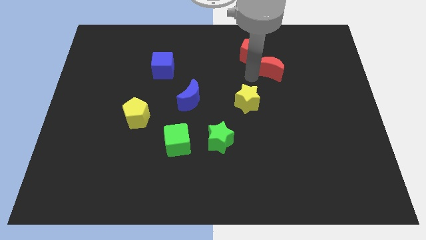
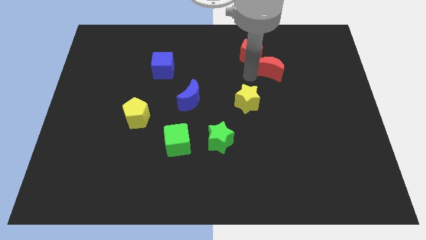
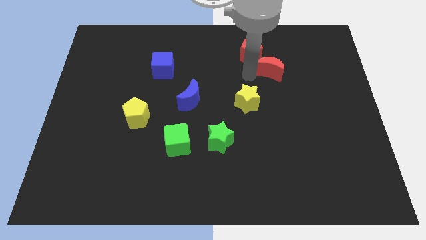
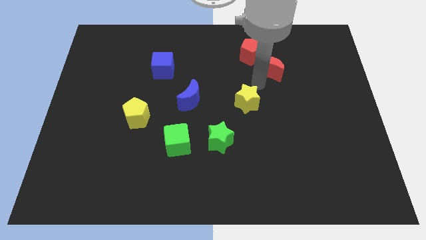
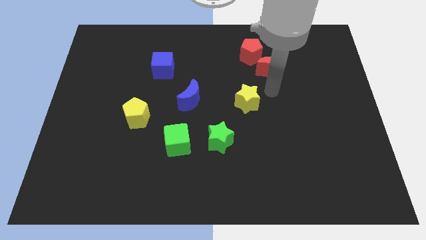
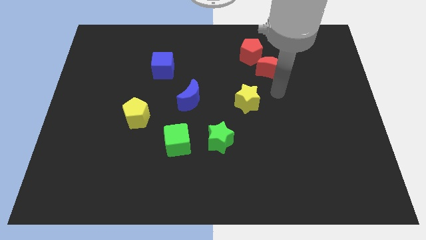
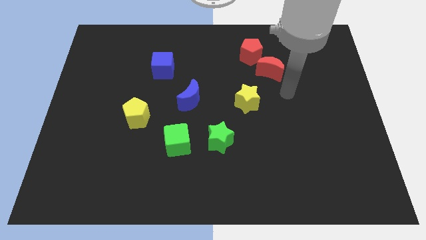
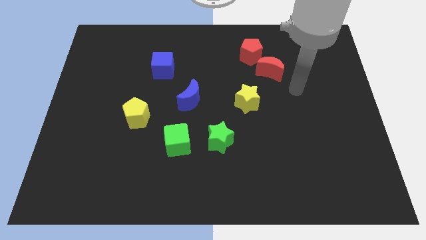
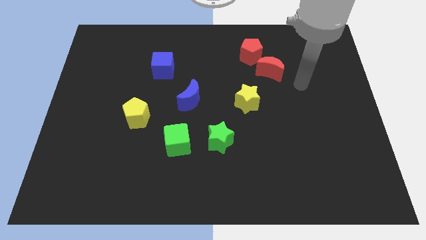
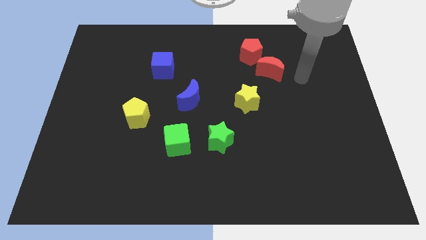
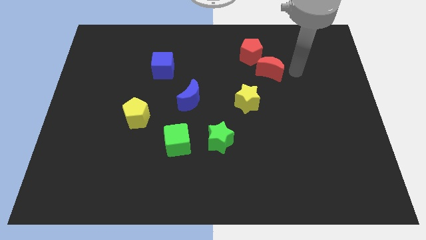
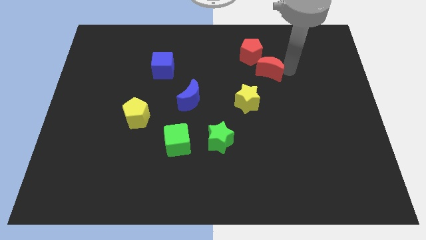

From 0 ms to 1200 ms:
drag your arm right to the red crescent

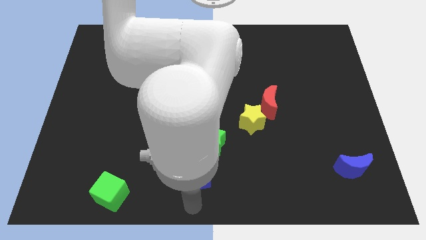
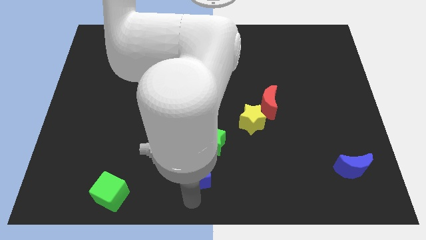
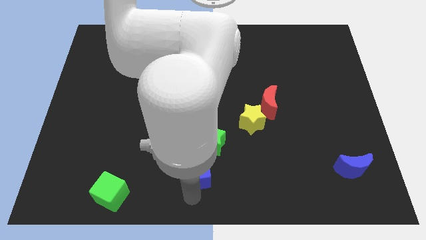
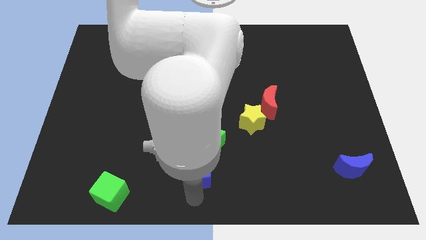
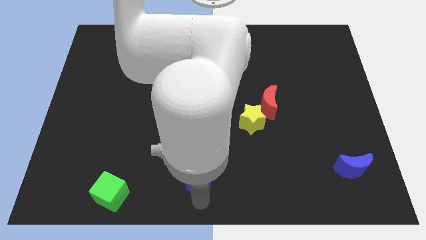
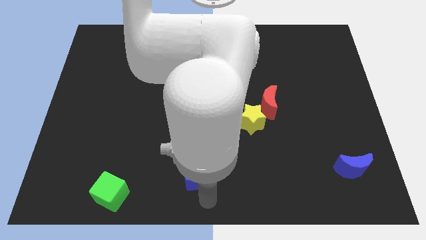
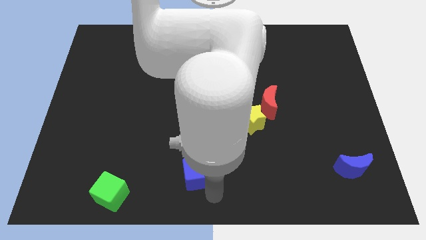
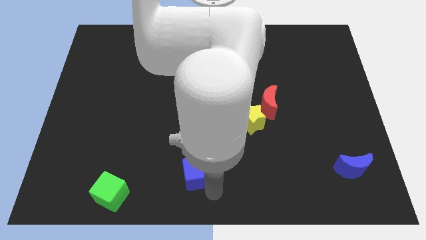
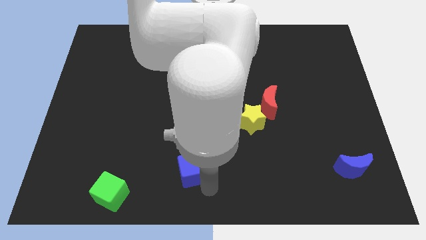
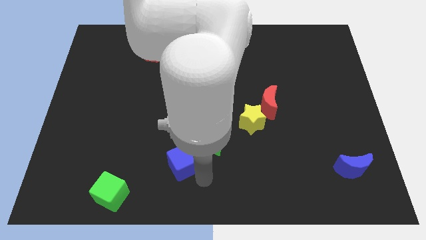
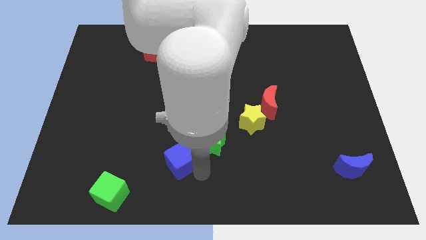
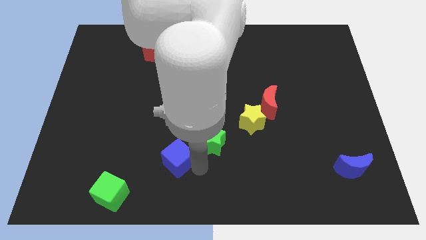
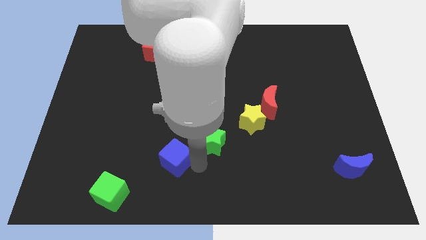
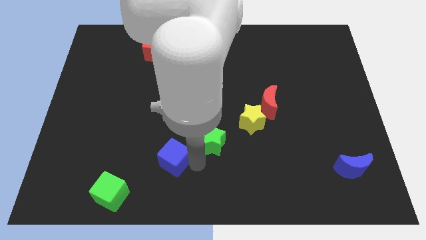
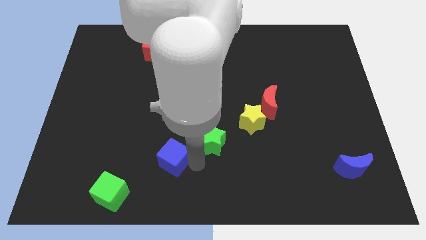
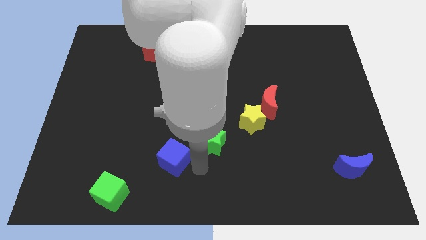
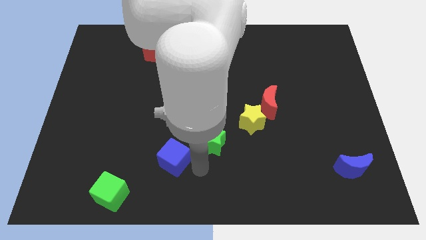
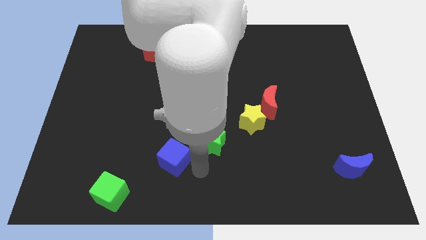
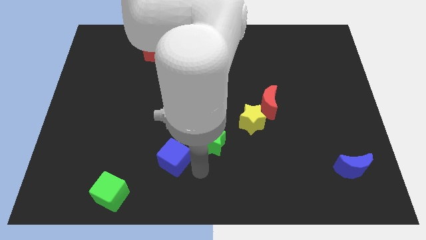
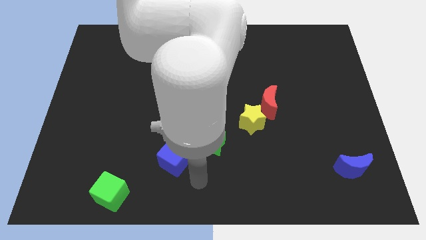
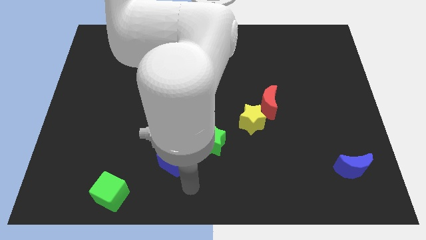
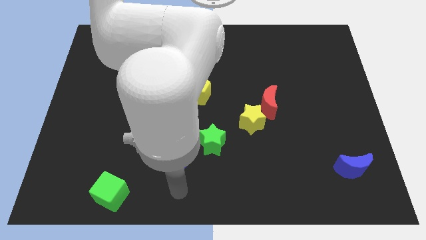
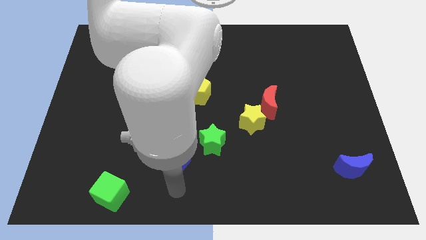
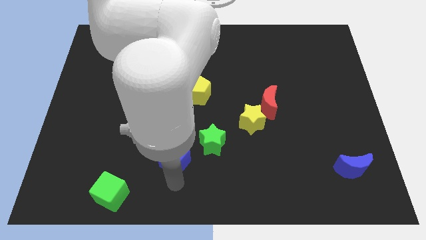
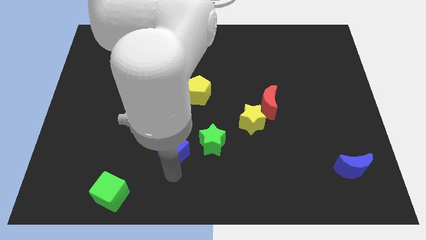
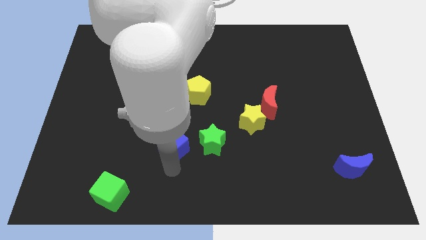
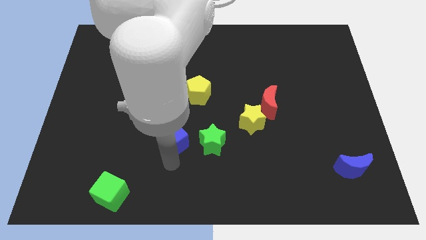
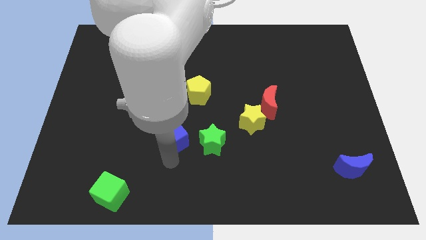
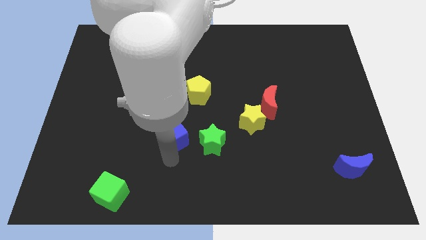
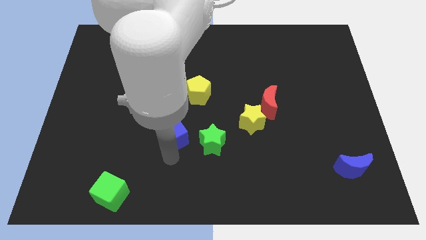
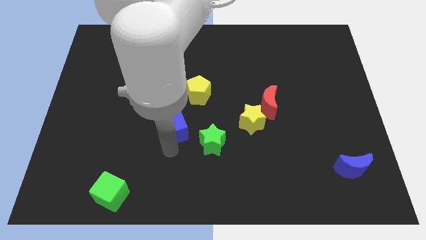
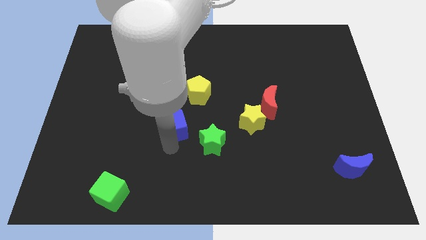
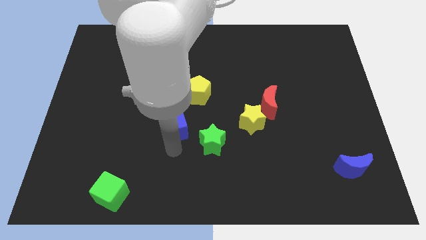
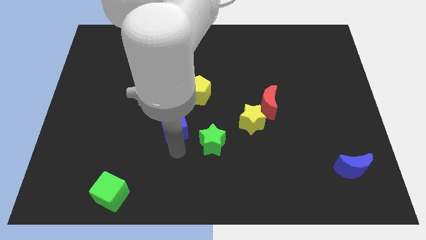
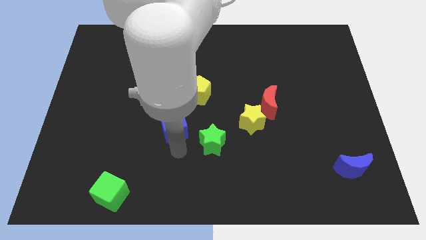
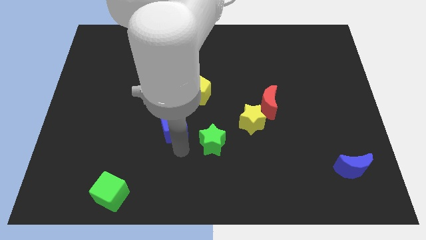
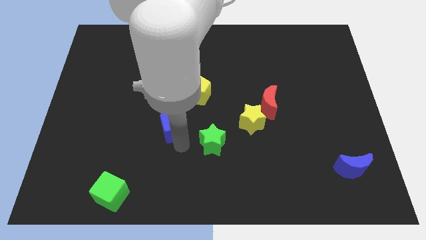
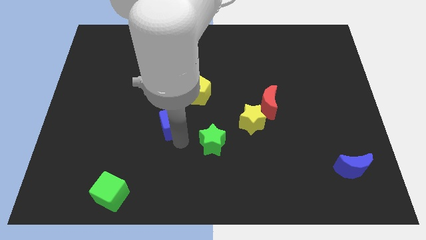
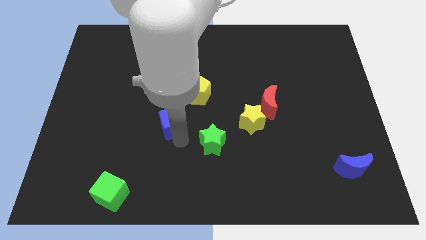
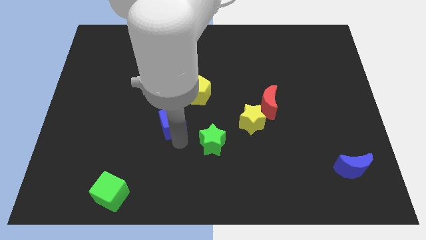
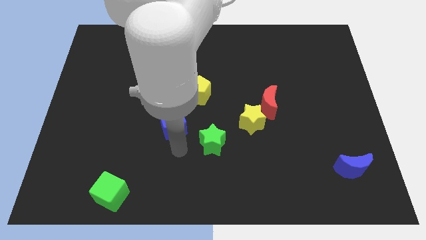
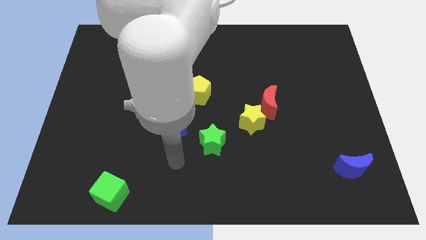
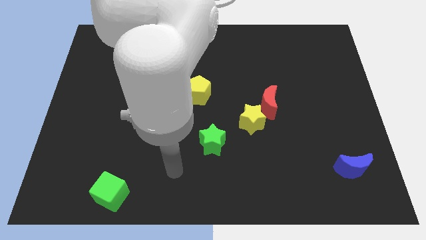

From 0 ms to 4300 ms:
move the blue cube up

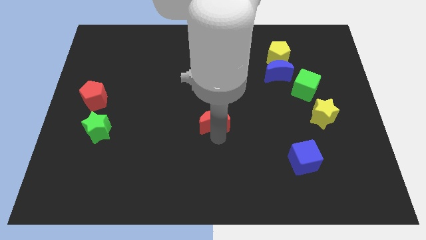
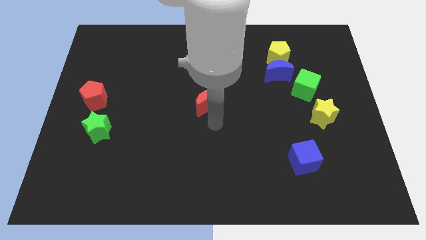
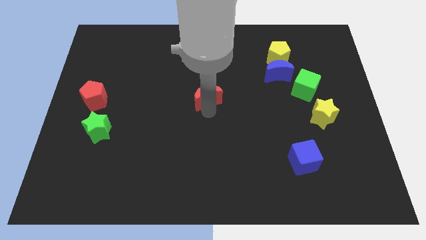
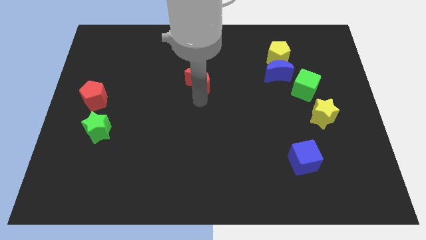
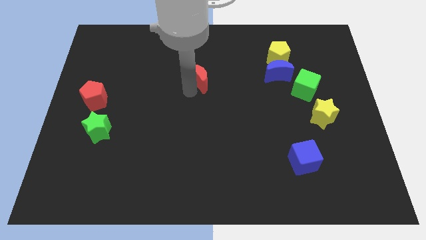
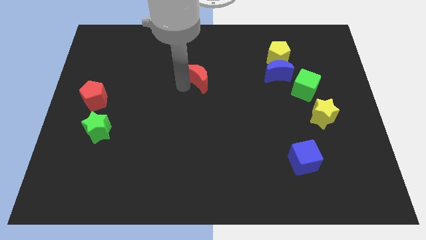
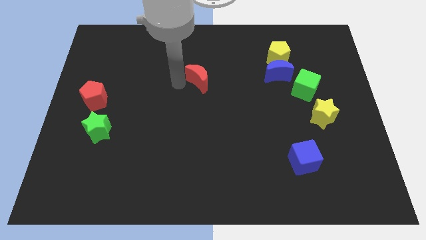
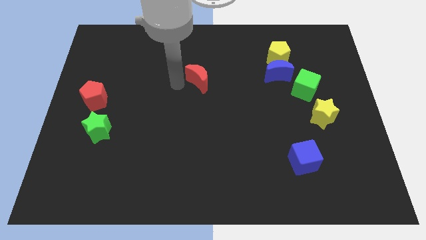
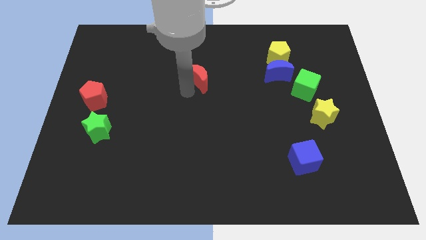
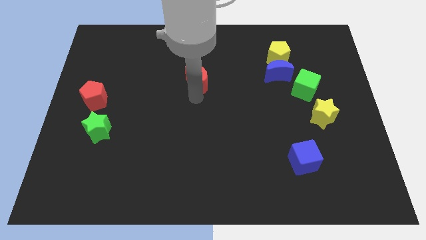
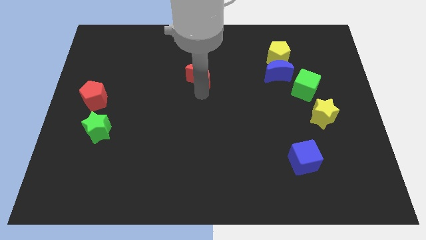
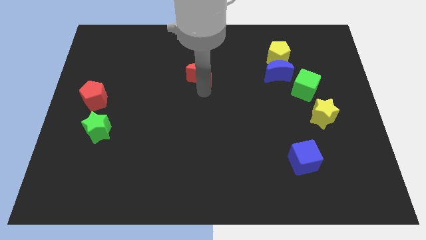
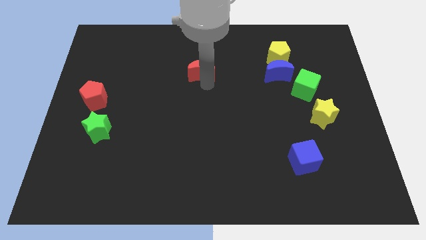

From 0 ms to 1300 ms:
place the red crescent to the left side of the blue crescent

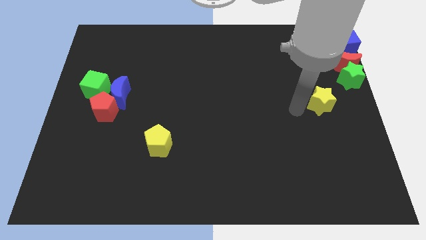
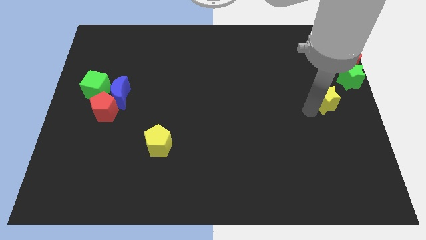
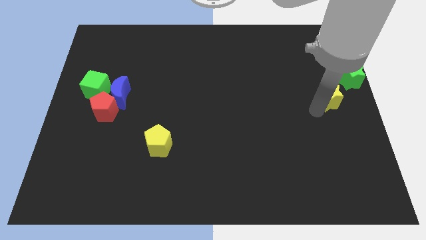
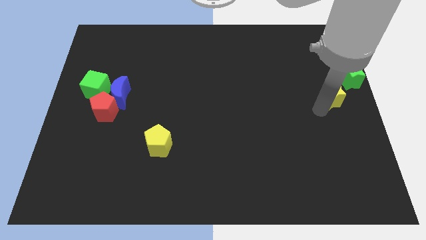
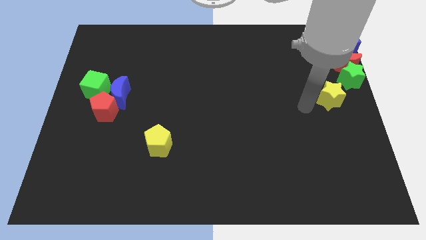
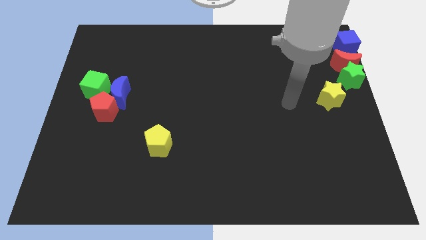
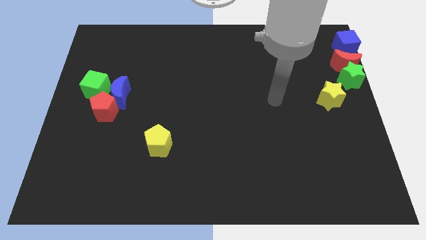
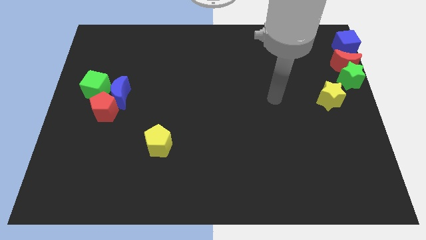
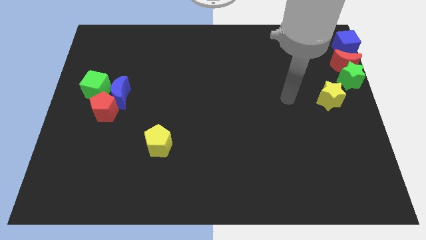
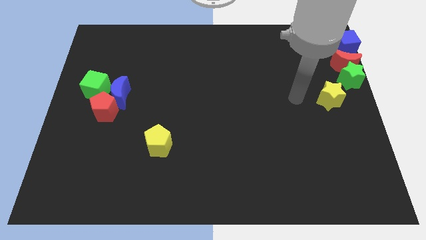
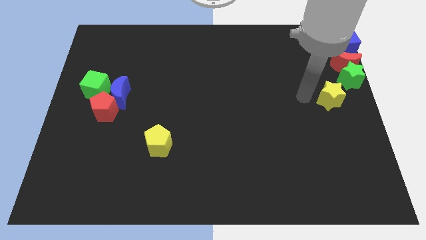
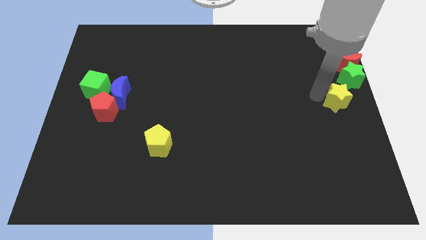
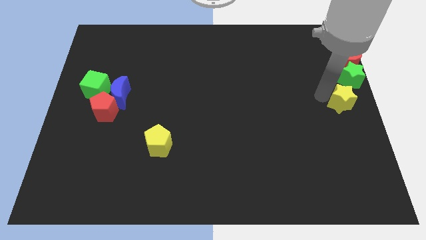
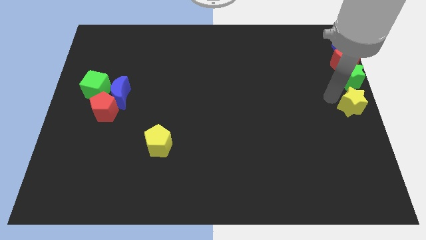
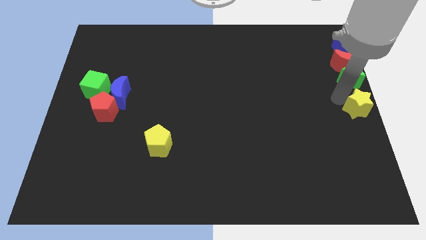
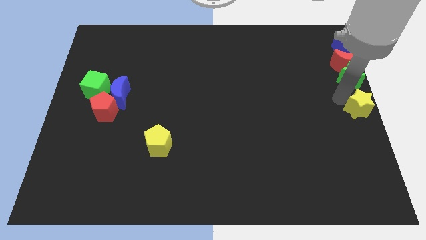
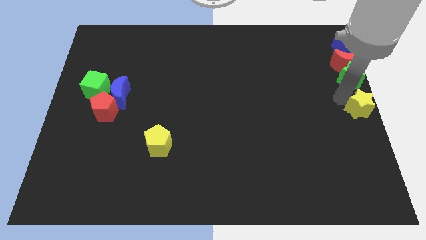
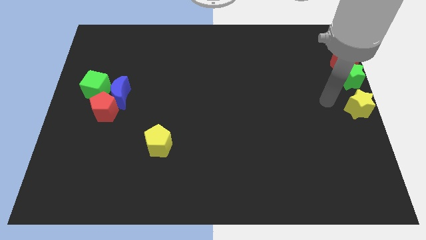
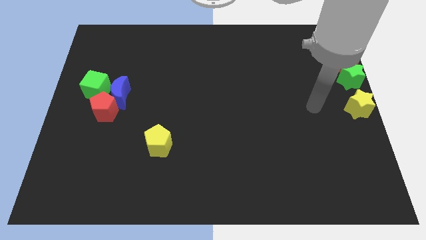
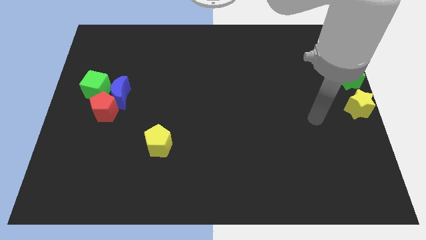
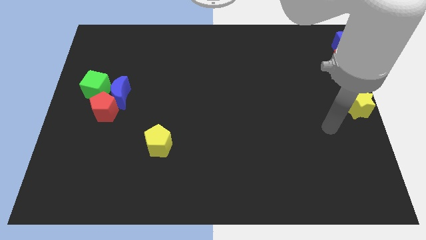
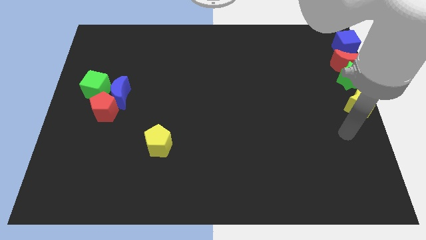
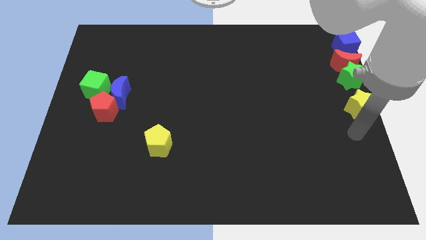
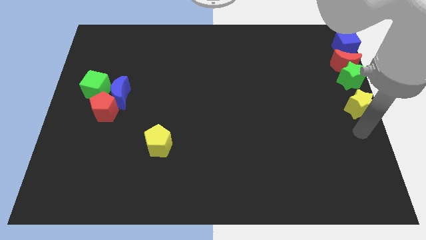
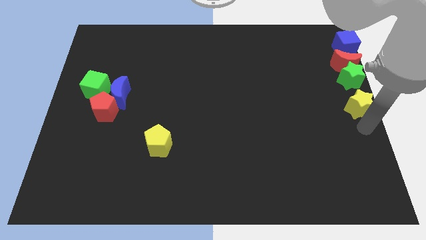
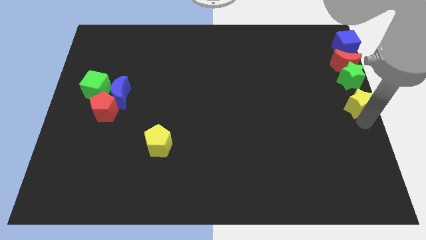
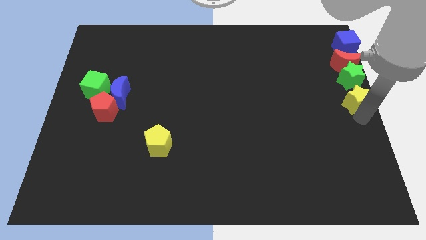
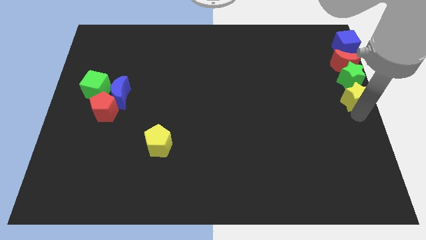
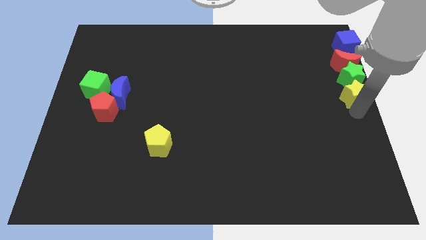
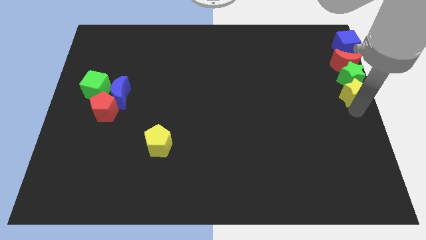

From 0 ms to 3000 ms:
place yellow star below to the green star
